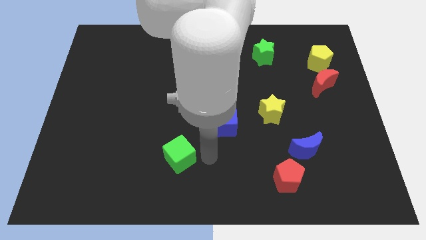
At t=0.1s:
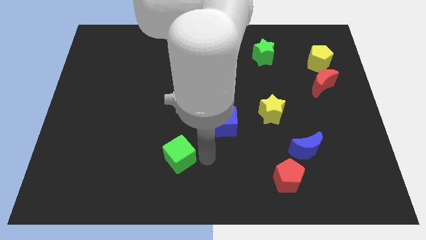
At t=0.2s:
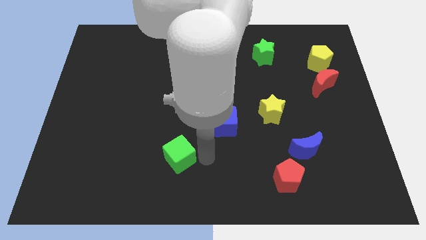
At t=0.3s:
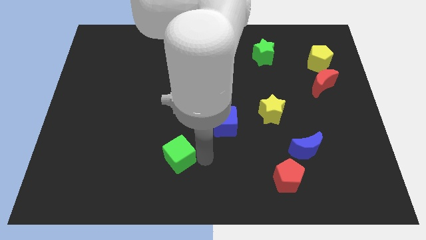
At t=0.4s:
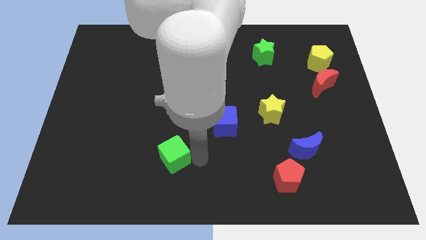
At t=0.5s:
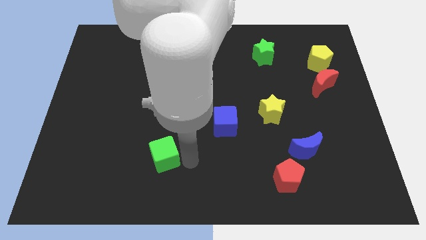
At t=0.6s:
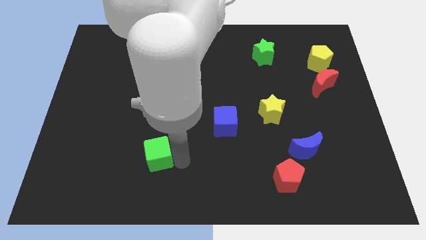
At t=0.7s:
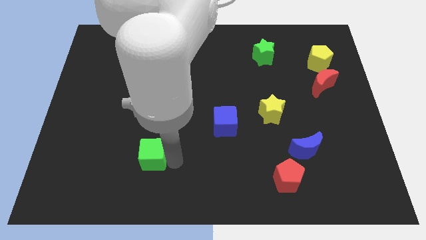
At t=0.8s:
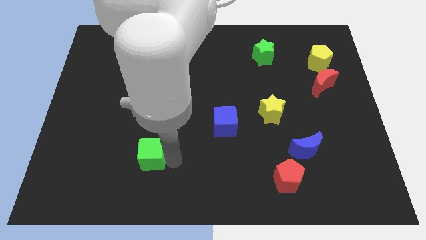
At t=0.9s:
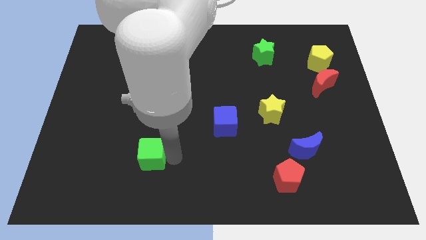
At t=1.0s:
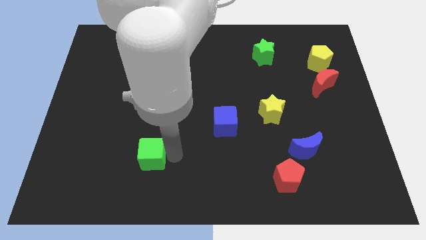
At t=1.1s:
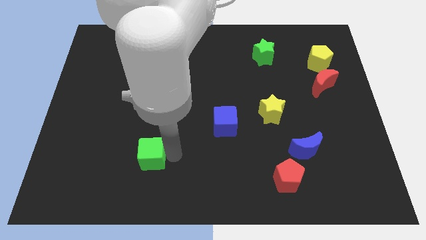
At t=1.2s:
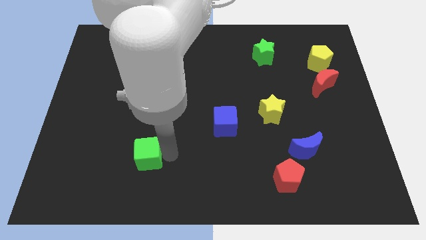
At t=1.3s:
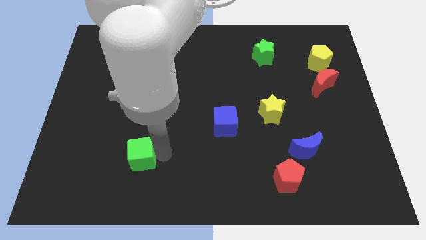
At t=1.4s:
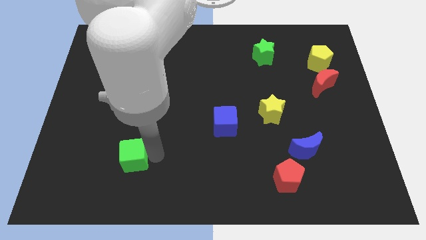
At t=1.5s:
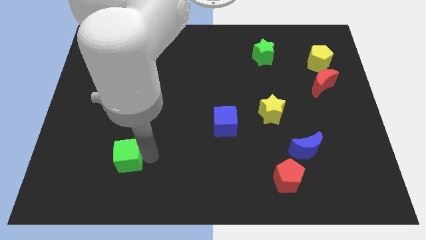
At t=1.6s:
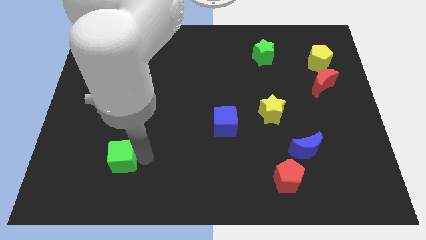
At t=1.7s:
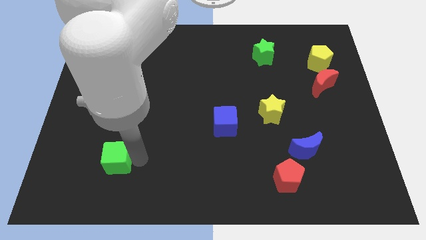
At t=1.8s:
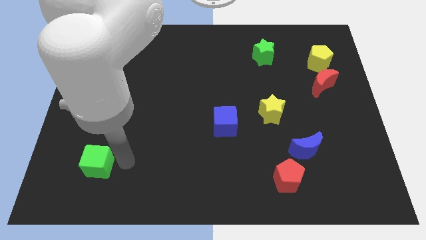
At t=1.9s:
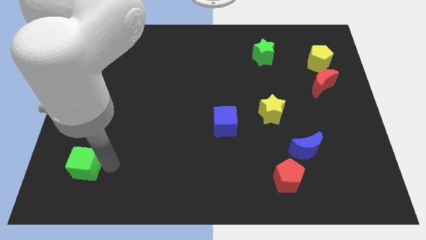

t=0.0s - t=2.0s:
move the green cube to the left side of the board

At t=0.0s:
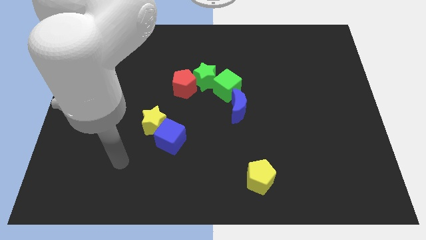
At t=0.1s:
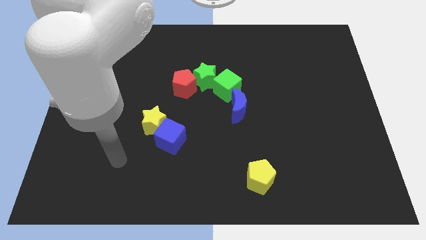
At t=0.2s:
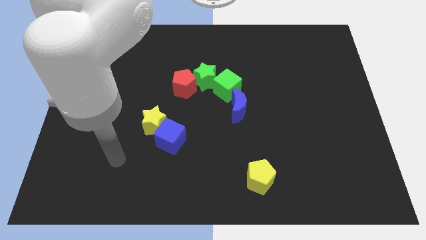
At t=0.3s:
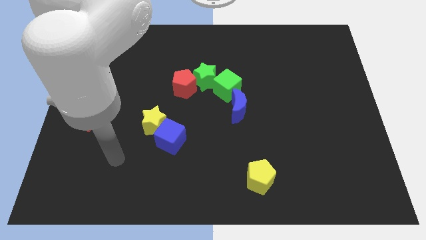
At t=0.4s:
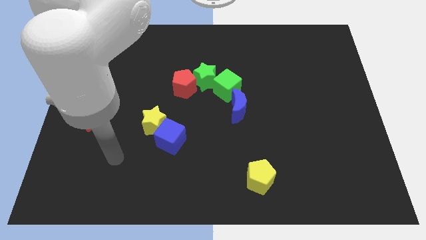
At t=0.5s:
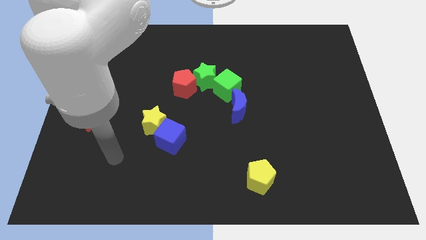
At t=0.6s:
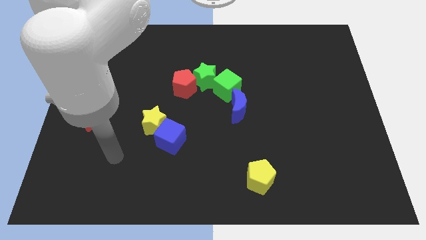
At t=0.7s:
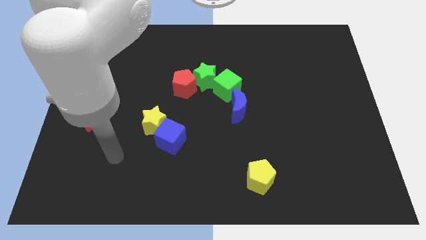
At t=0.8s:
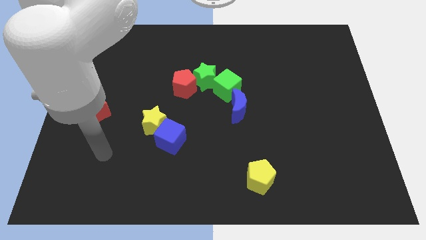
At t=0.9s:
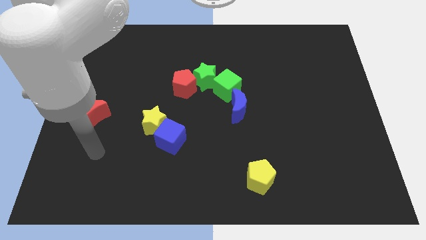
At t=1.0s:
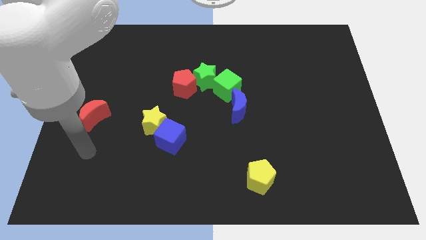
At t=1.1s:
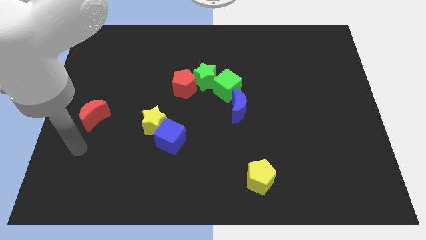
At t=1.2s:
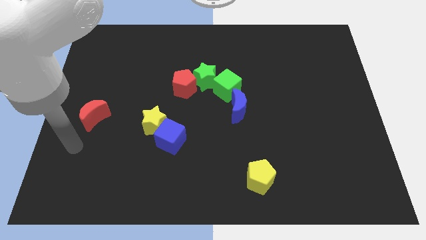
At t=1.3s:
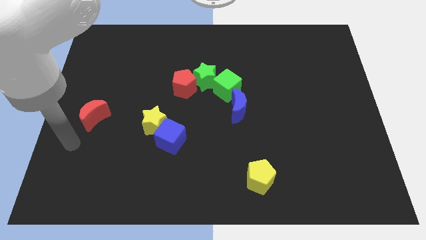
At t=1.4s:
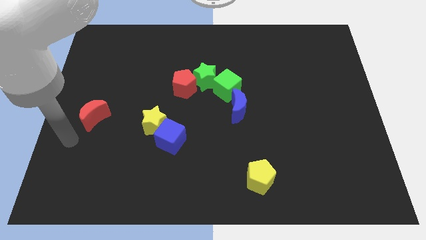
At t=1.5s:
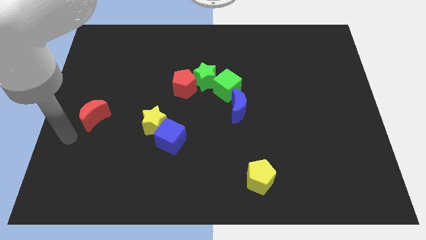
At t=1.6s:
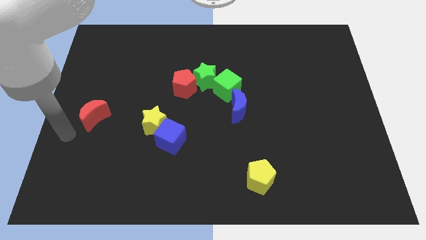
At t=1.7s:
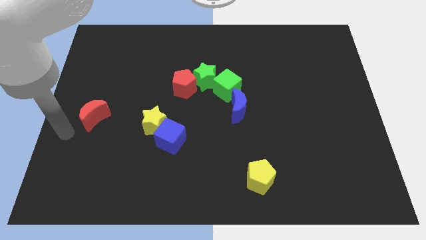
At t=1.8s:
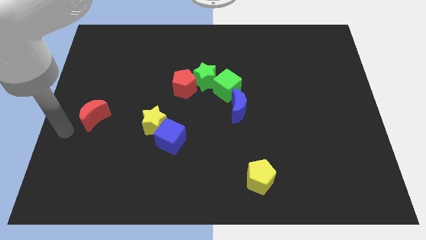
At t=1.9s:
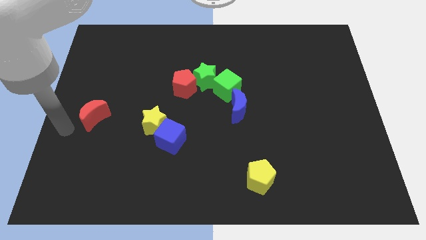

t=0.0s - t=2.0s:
point your arm at the bottom left of the red moon

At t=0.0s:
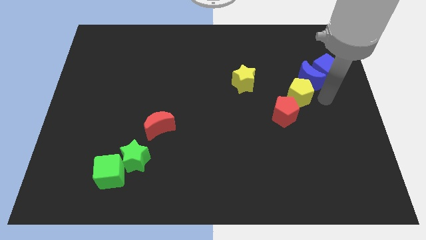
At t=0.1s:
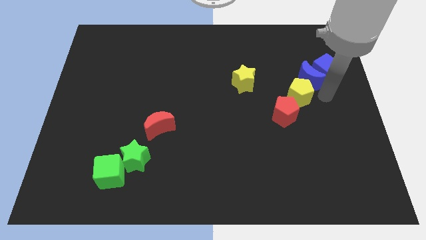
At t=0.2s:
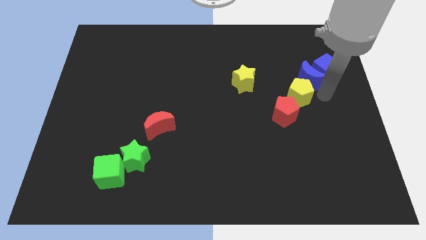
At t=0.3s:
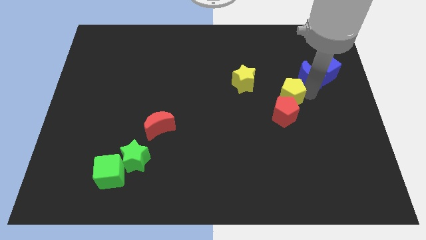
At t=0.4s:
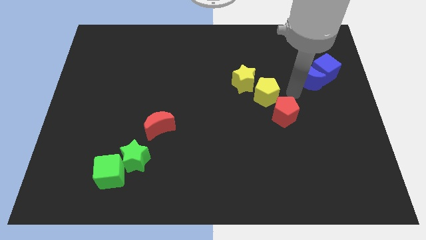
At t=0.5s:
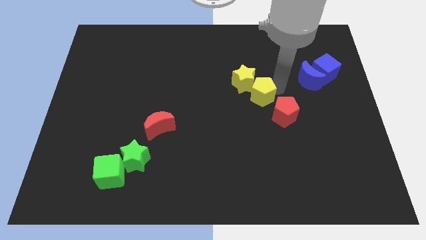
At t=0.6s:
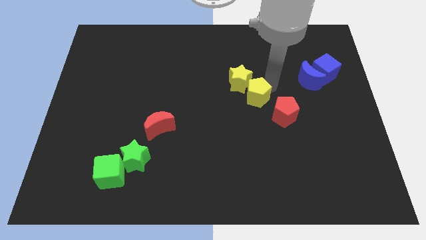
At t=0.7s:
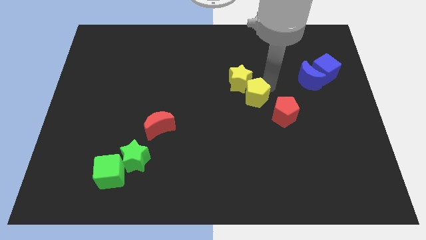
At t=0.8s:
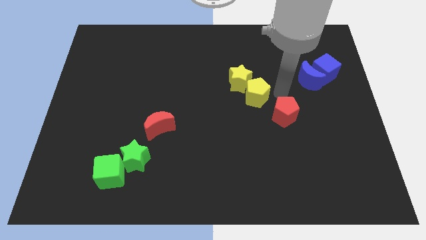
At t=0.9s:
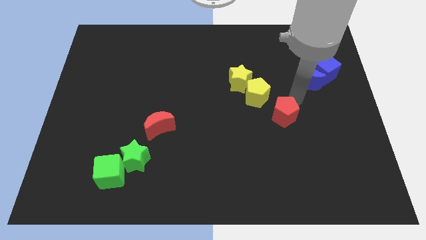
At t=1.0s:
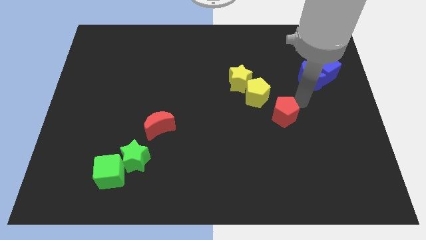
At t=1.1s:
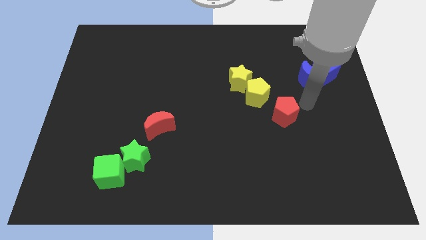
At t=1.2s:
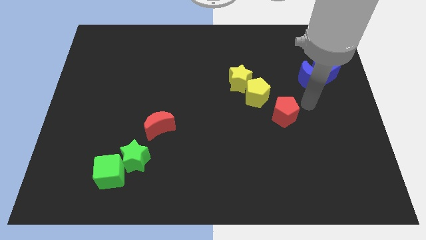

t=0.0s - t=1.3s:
move the yellow pentagon away from the middle of the blue moon and red pentagon

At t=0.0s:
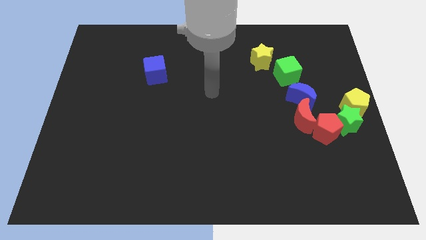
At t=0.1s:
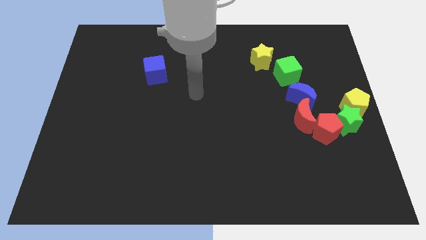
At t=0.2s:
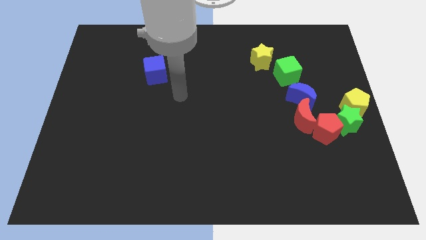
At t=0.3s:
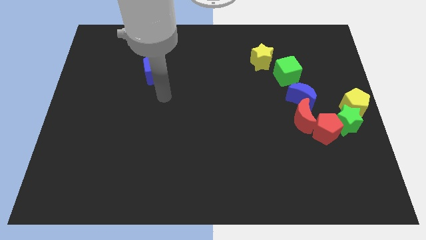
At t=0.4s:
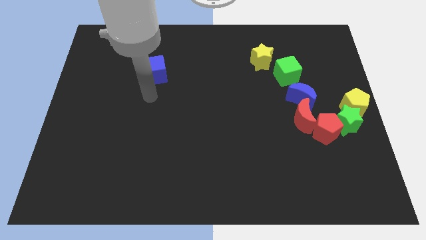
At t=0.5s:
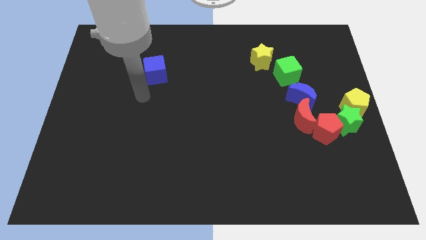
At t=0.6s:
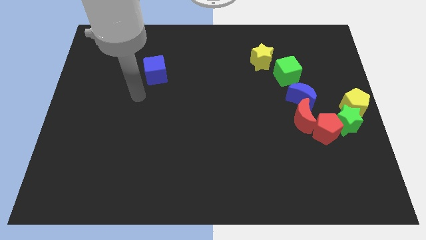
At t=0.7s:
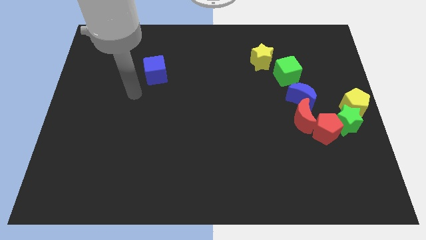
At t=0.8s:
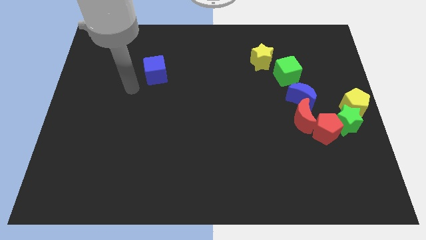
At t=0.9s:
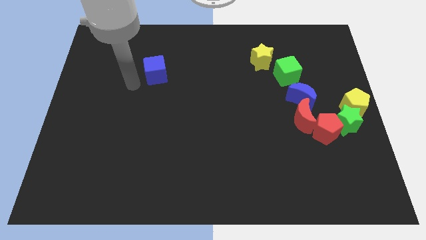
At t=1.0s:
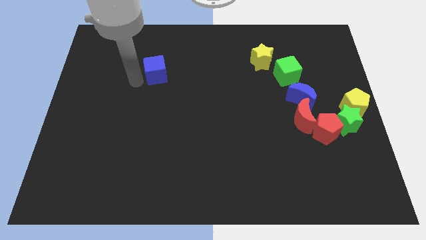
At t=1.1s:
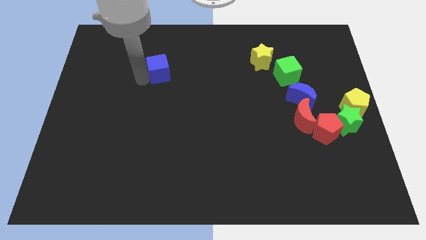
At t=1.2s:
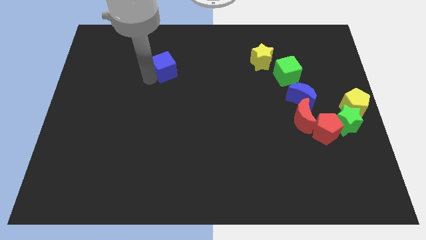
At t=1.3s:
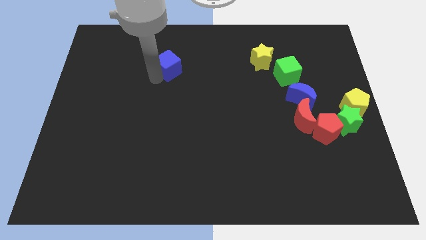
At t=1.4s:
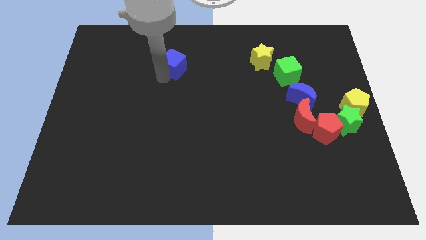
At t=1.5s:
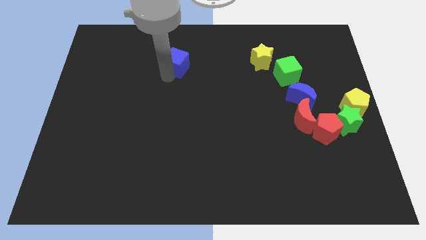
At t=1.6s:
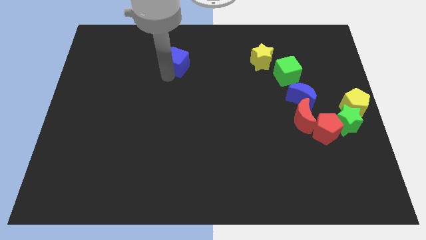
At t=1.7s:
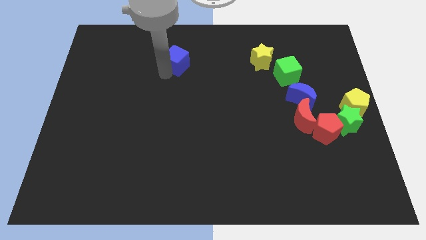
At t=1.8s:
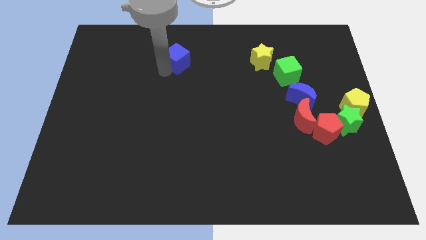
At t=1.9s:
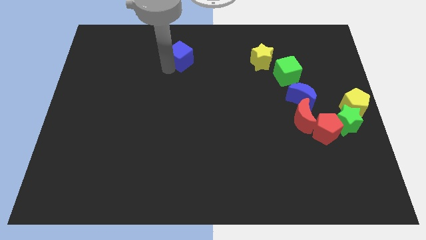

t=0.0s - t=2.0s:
move the blue cube to the top center of the board

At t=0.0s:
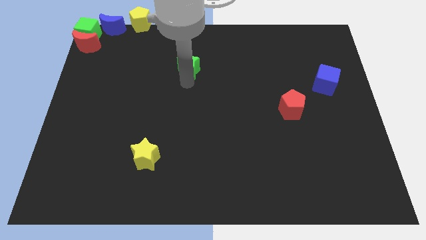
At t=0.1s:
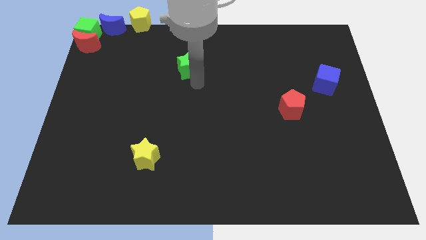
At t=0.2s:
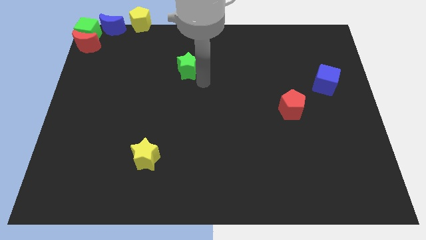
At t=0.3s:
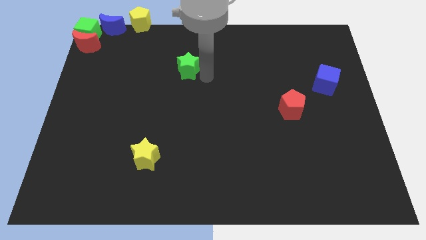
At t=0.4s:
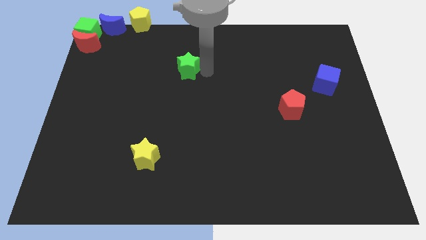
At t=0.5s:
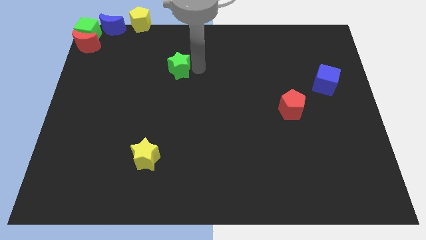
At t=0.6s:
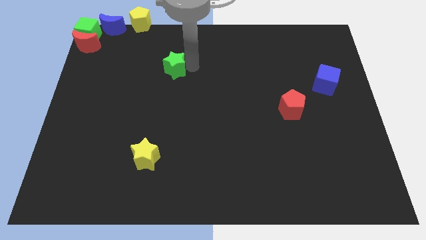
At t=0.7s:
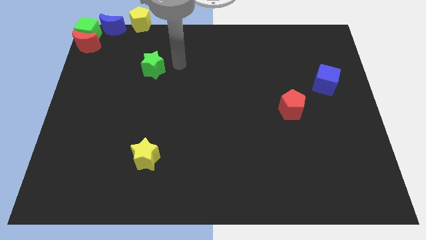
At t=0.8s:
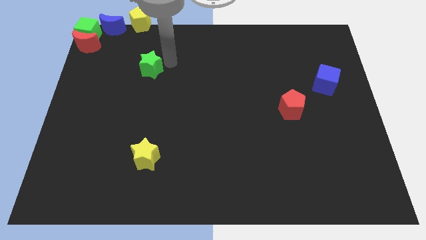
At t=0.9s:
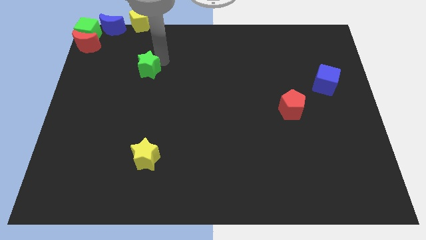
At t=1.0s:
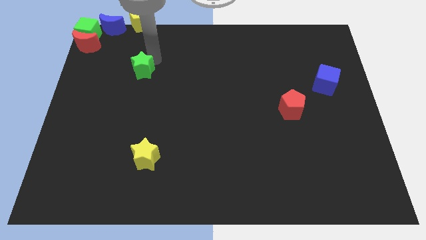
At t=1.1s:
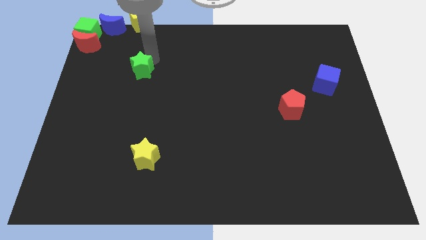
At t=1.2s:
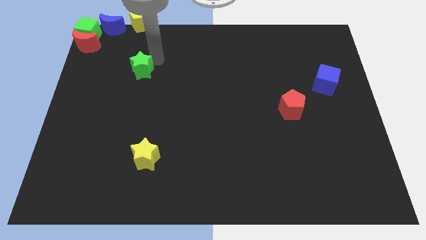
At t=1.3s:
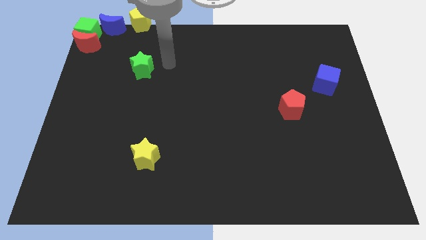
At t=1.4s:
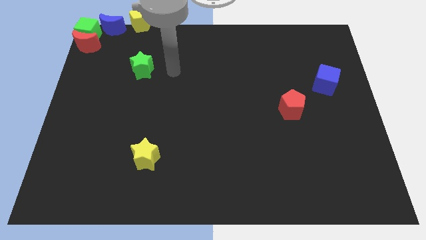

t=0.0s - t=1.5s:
push the green star to center left

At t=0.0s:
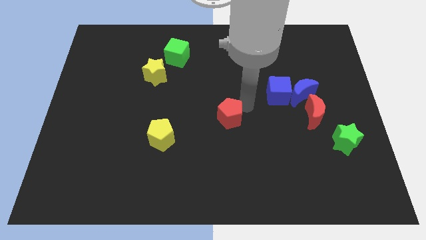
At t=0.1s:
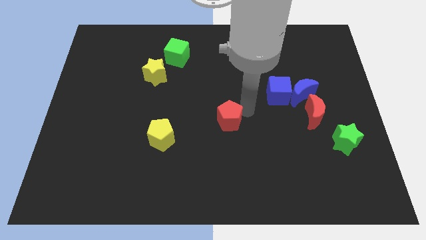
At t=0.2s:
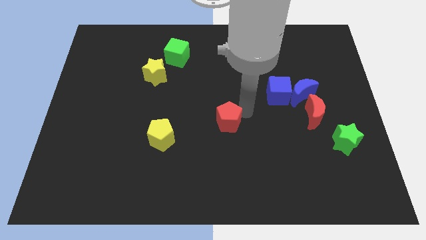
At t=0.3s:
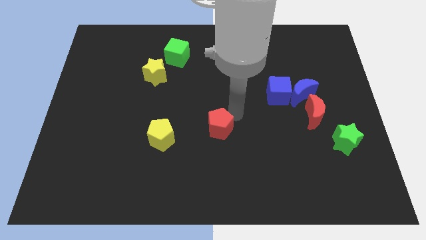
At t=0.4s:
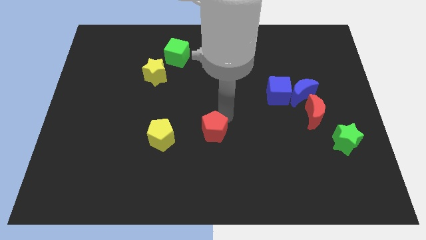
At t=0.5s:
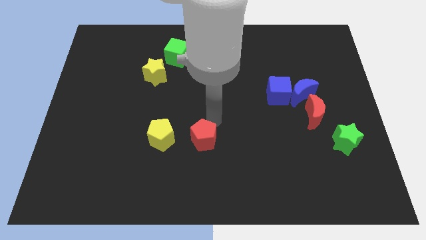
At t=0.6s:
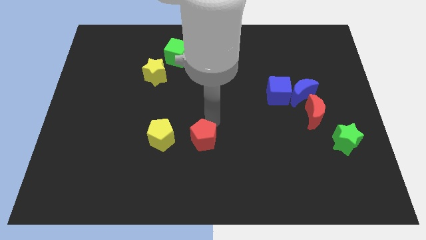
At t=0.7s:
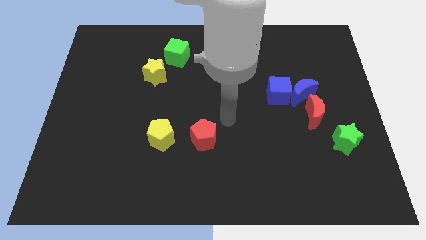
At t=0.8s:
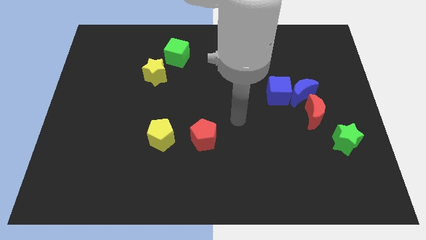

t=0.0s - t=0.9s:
place the red pentagon to the right side of the yellow pentagon
